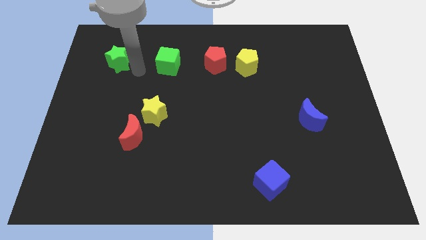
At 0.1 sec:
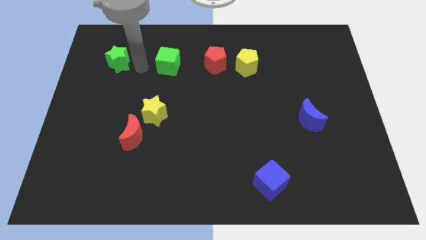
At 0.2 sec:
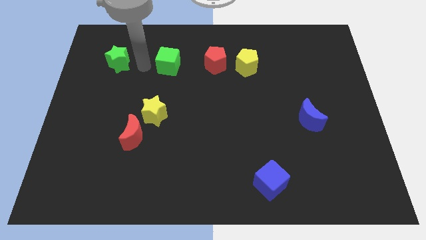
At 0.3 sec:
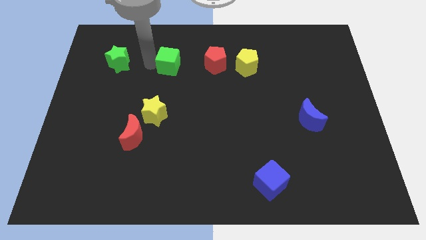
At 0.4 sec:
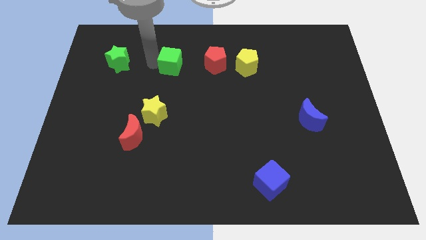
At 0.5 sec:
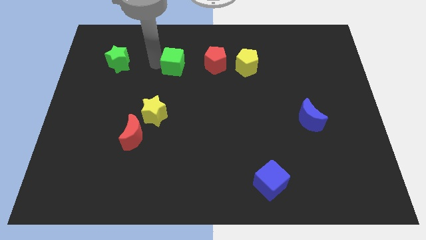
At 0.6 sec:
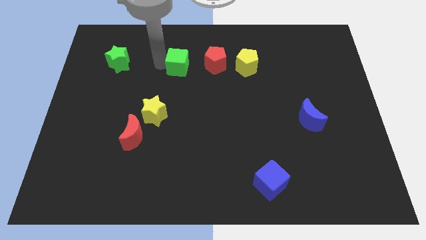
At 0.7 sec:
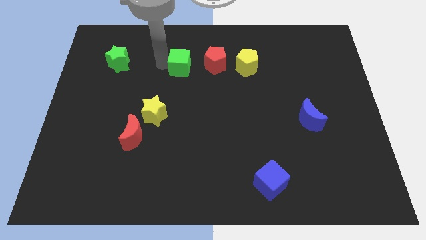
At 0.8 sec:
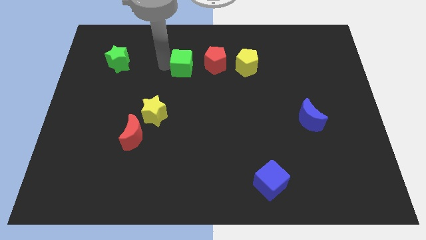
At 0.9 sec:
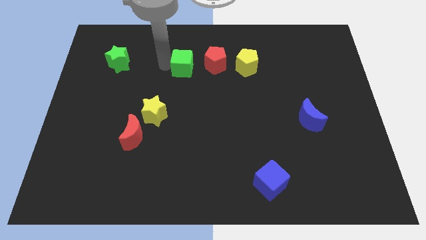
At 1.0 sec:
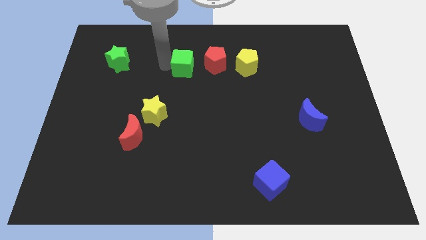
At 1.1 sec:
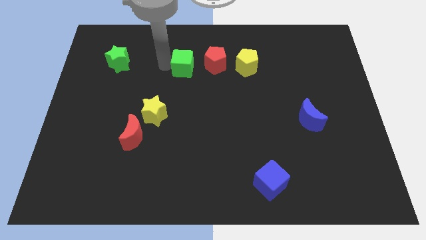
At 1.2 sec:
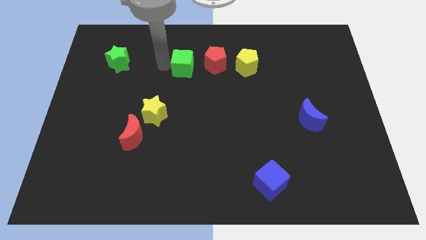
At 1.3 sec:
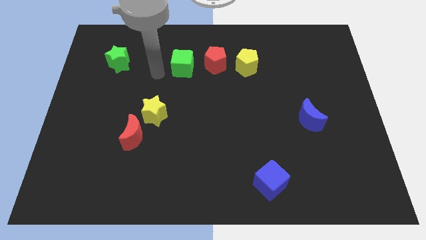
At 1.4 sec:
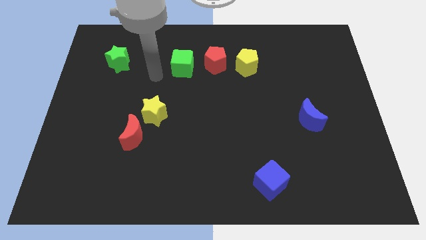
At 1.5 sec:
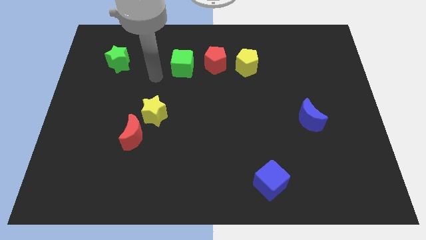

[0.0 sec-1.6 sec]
move the green cube to the left of the red pentagon

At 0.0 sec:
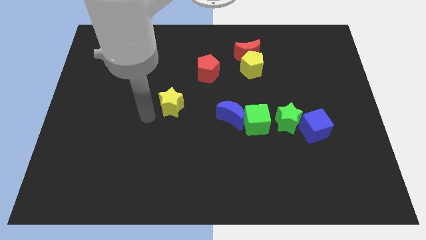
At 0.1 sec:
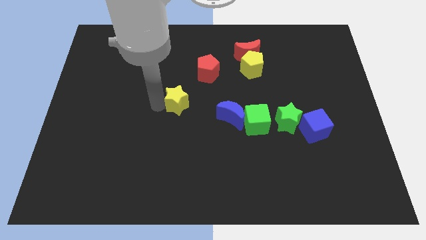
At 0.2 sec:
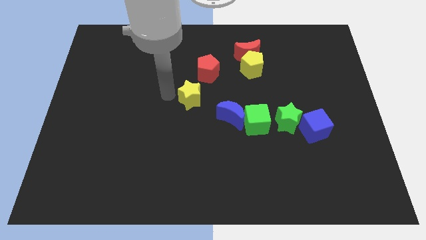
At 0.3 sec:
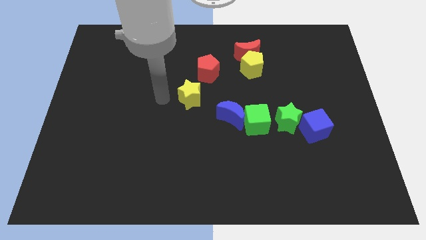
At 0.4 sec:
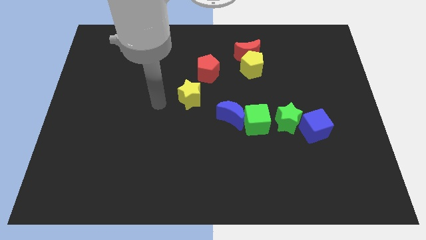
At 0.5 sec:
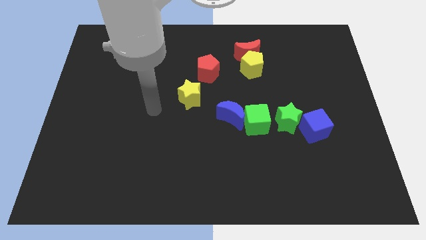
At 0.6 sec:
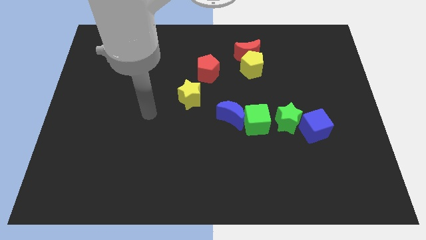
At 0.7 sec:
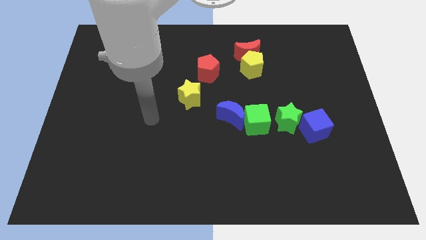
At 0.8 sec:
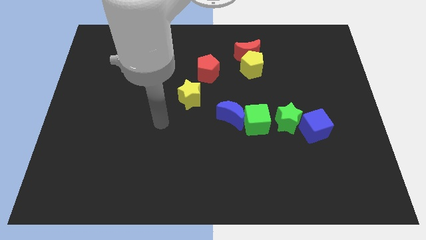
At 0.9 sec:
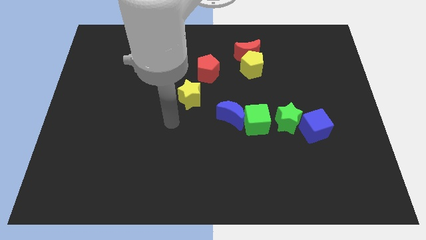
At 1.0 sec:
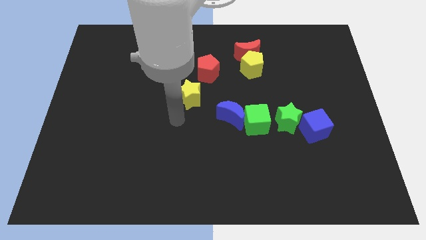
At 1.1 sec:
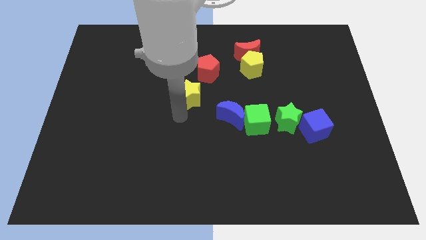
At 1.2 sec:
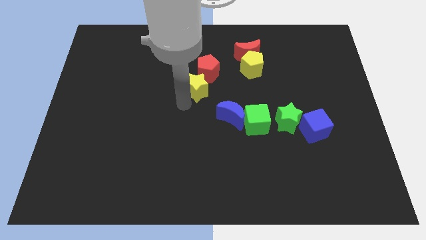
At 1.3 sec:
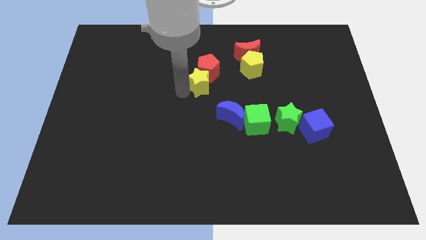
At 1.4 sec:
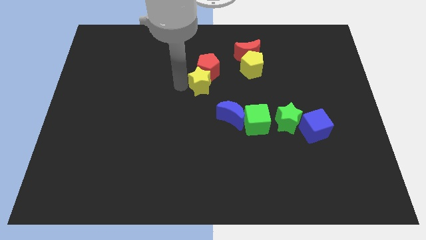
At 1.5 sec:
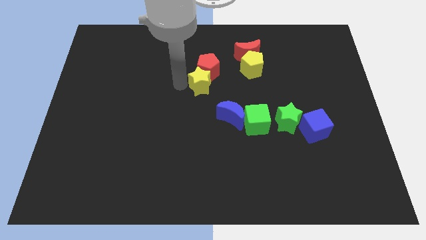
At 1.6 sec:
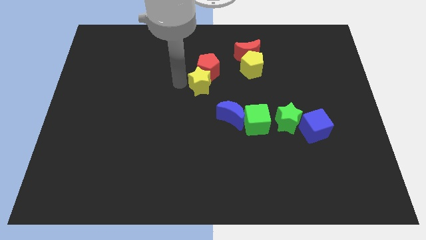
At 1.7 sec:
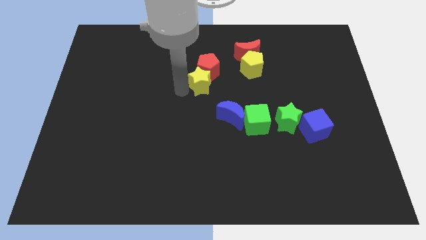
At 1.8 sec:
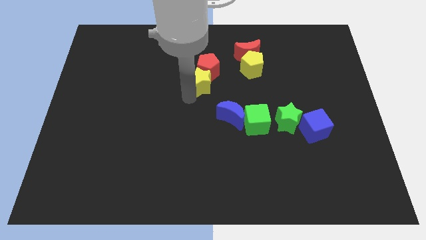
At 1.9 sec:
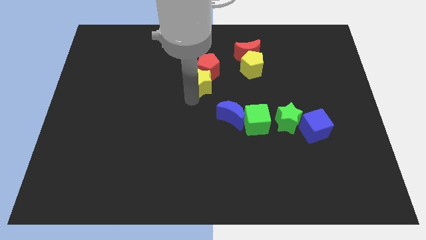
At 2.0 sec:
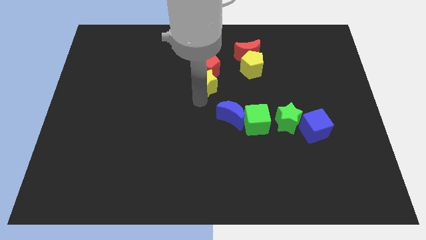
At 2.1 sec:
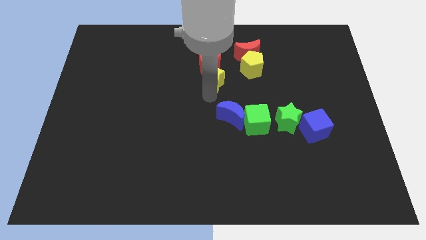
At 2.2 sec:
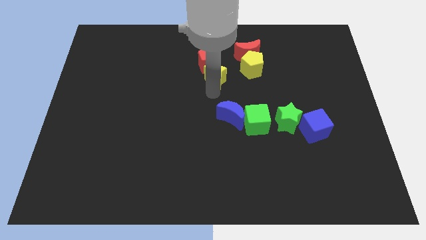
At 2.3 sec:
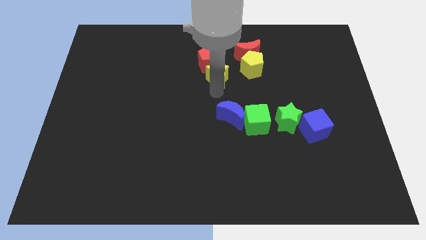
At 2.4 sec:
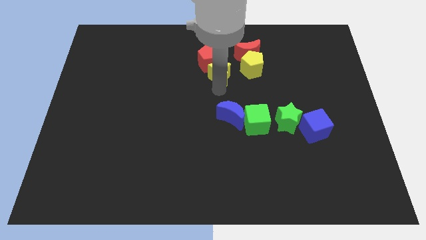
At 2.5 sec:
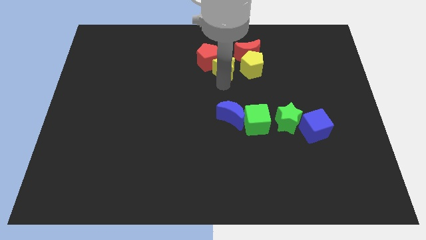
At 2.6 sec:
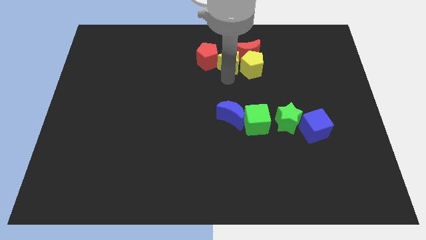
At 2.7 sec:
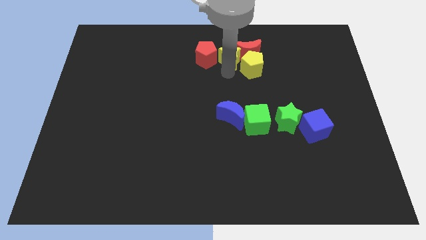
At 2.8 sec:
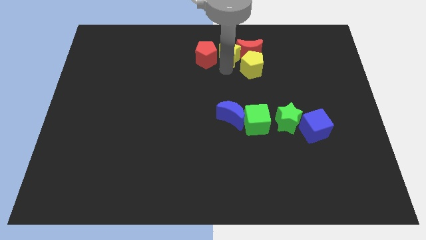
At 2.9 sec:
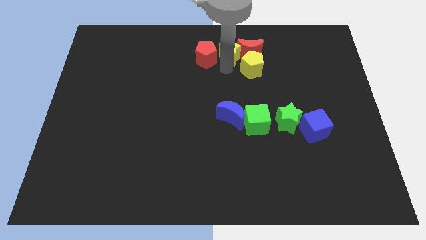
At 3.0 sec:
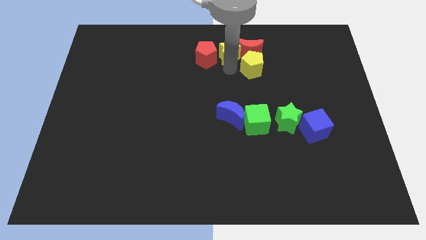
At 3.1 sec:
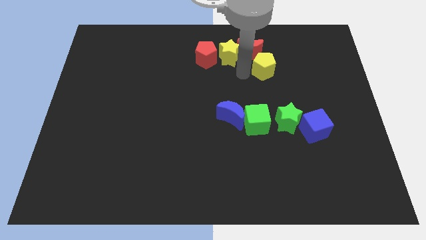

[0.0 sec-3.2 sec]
move the yellow star in between the red pentagon and red crescent

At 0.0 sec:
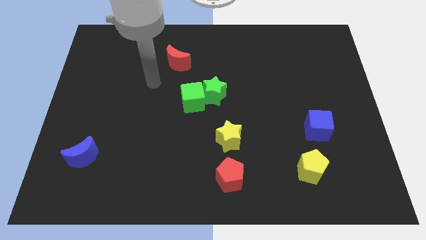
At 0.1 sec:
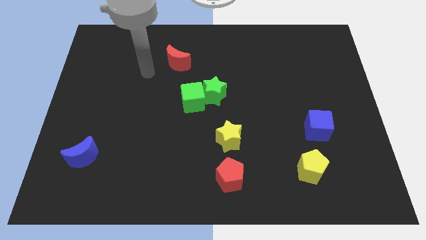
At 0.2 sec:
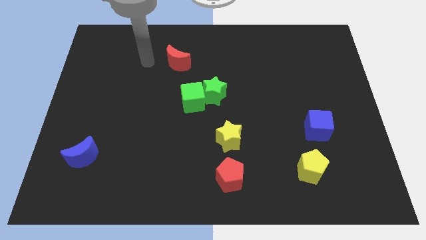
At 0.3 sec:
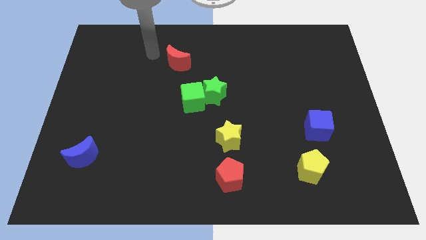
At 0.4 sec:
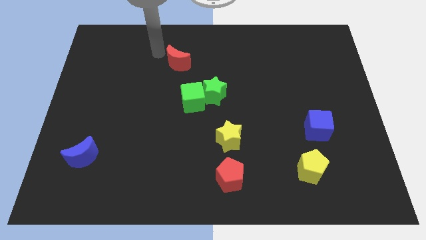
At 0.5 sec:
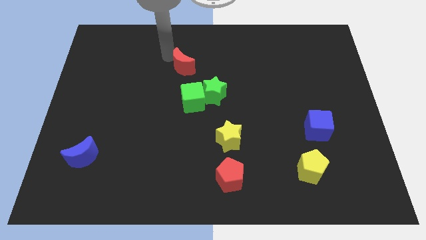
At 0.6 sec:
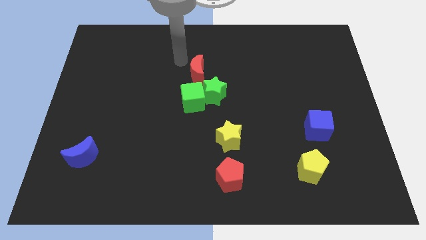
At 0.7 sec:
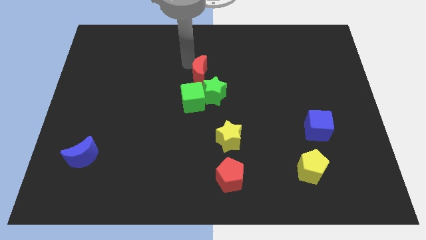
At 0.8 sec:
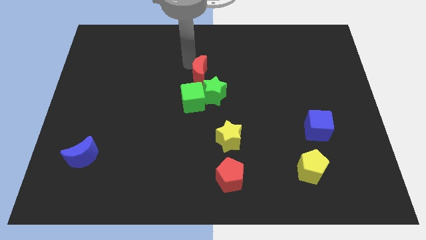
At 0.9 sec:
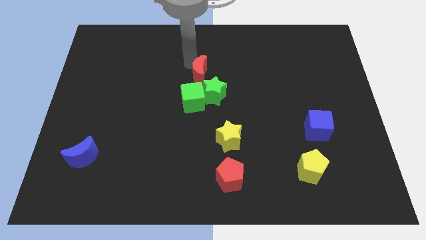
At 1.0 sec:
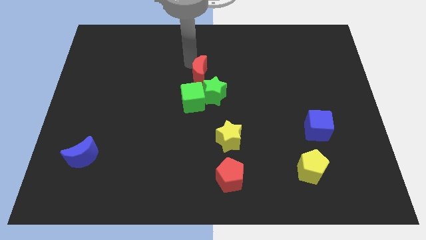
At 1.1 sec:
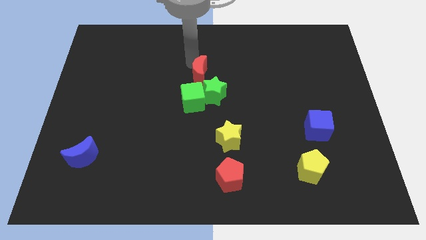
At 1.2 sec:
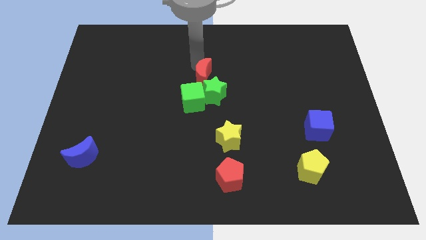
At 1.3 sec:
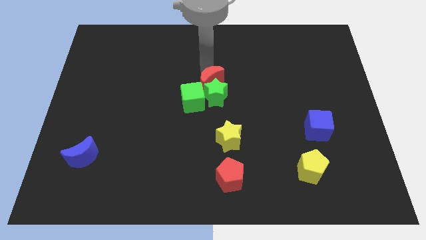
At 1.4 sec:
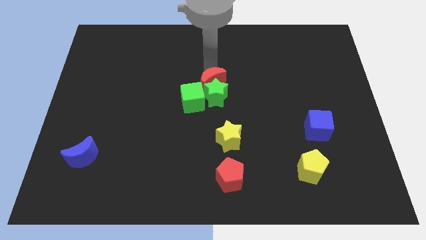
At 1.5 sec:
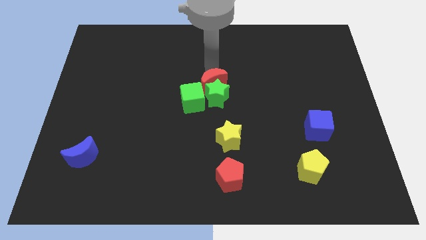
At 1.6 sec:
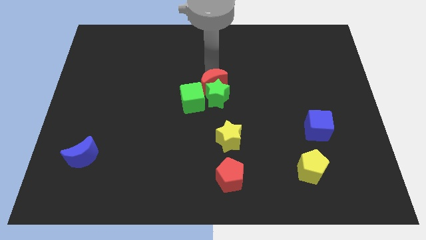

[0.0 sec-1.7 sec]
move red half moon above the green star

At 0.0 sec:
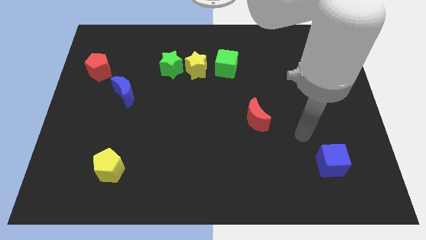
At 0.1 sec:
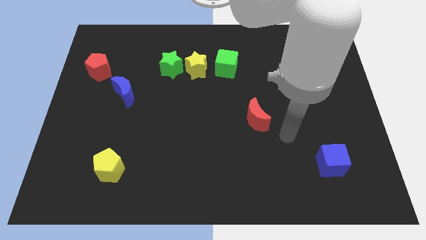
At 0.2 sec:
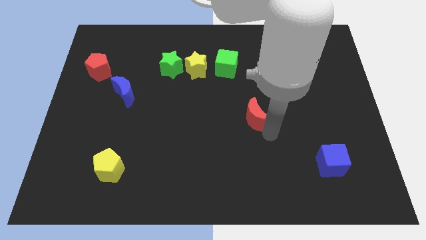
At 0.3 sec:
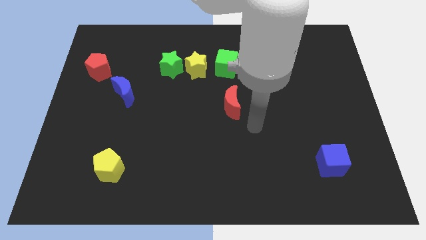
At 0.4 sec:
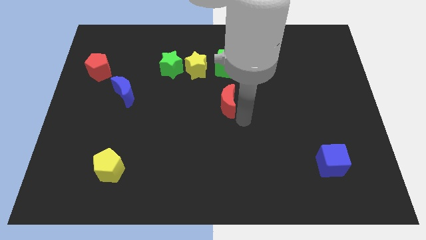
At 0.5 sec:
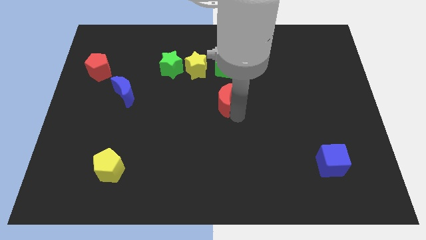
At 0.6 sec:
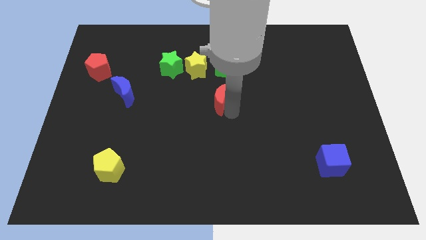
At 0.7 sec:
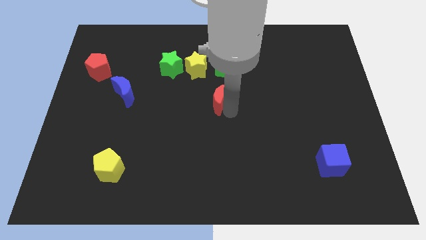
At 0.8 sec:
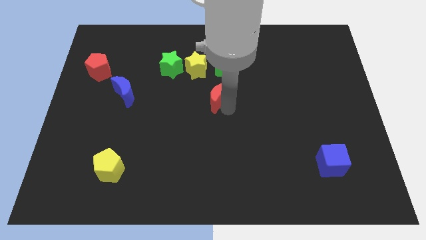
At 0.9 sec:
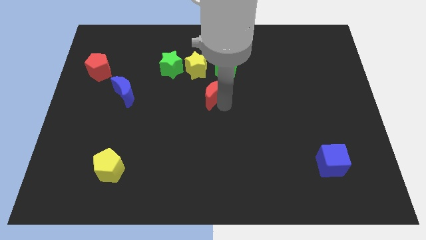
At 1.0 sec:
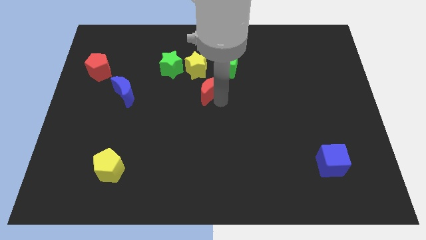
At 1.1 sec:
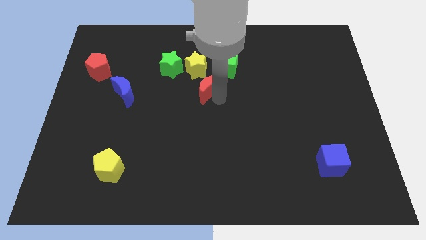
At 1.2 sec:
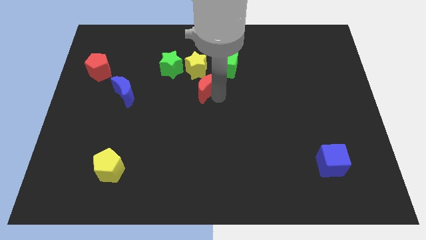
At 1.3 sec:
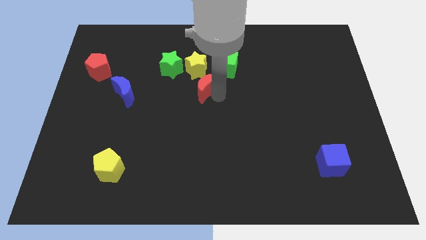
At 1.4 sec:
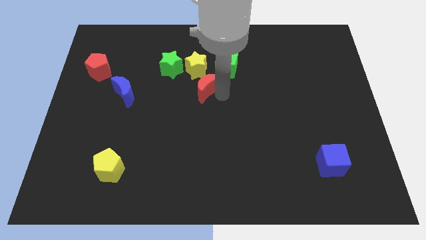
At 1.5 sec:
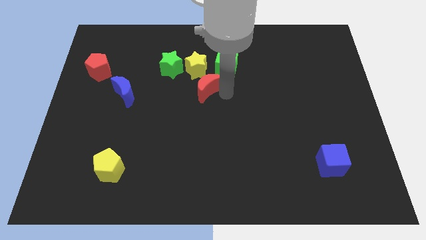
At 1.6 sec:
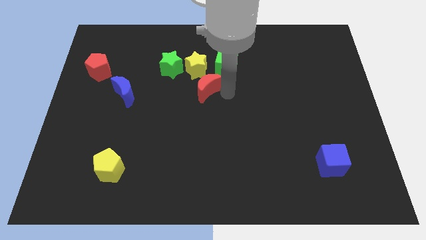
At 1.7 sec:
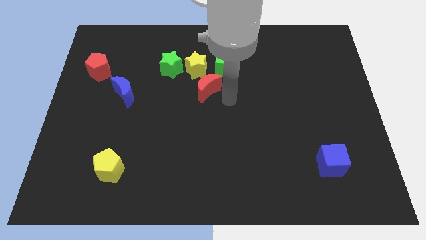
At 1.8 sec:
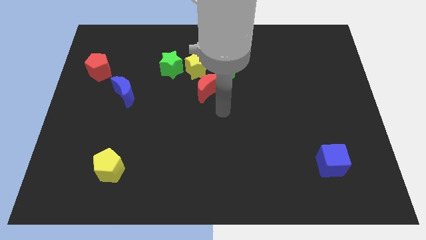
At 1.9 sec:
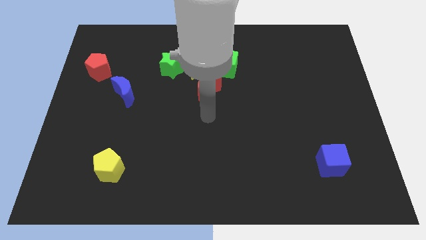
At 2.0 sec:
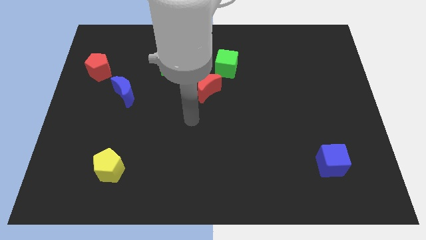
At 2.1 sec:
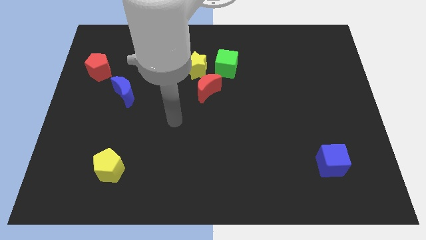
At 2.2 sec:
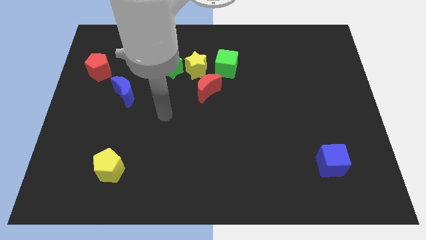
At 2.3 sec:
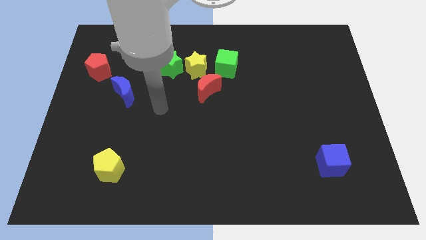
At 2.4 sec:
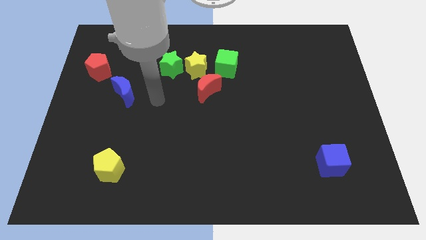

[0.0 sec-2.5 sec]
place the red moon diagonal to the yellow pentagon
